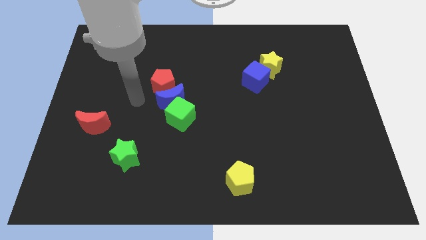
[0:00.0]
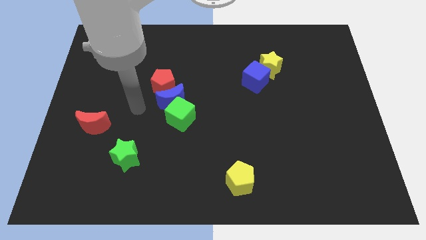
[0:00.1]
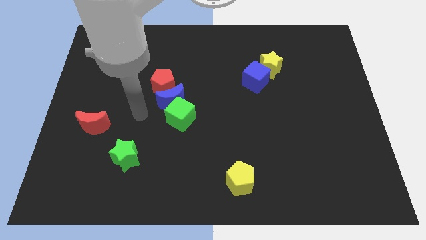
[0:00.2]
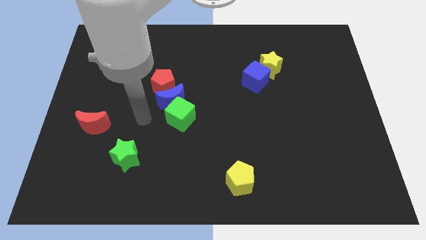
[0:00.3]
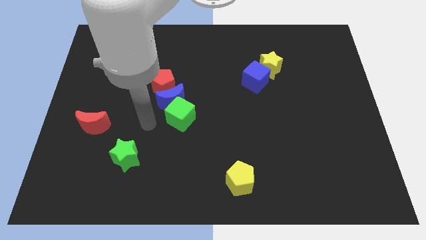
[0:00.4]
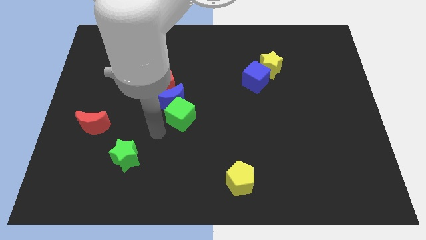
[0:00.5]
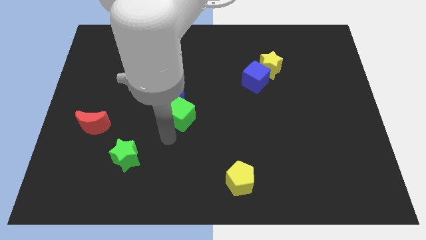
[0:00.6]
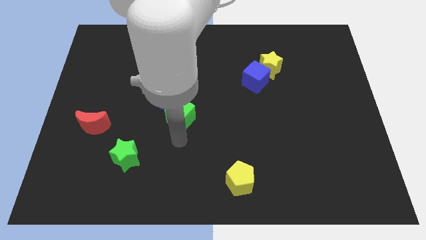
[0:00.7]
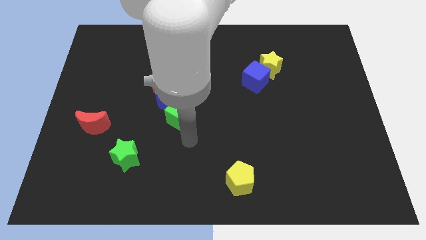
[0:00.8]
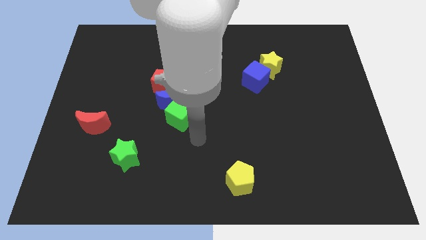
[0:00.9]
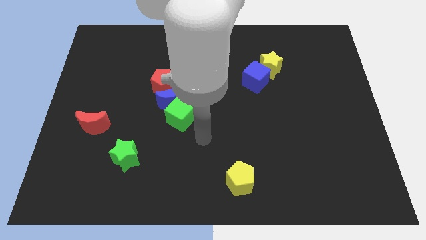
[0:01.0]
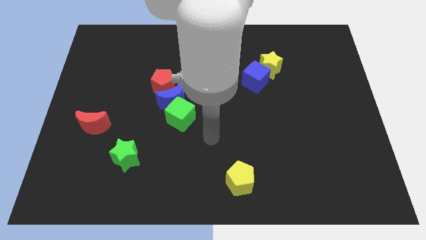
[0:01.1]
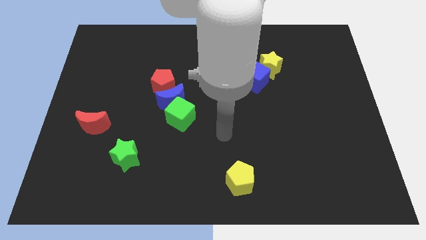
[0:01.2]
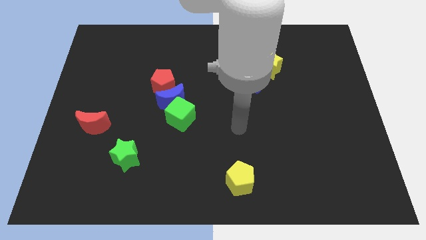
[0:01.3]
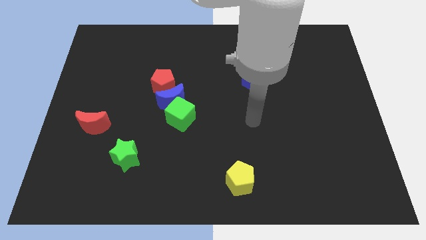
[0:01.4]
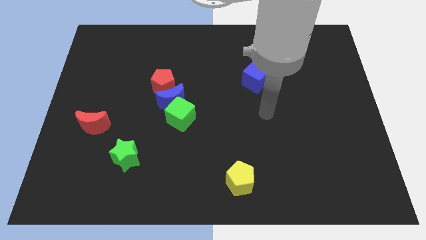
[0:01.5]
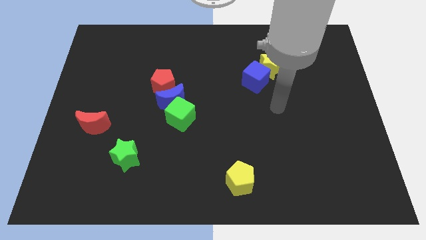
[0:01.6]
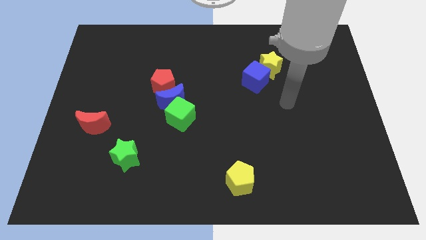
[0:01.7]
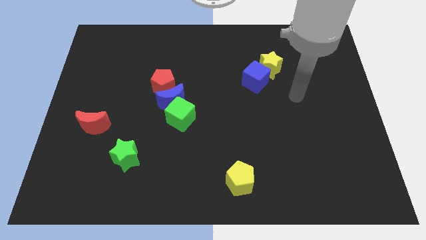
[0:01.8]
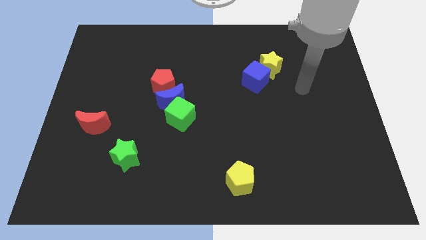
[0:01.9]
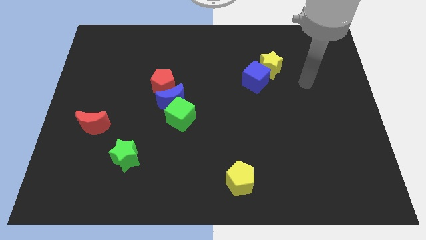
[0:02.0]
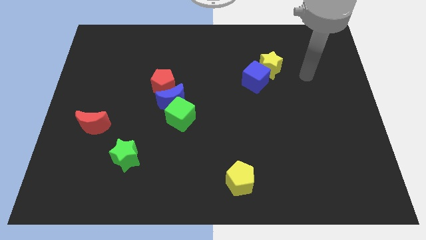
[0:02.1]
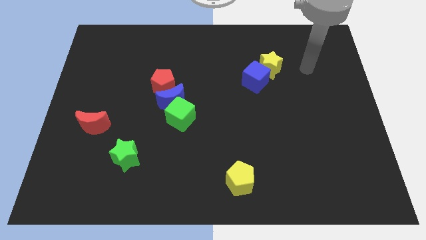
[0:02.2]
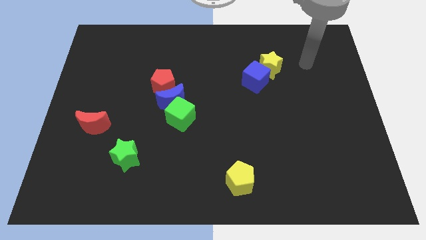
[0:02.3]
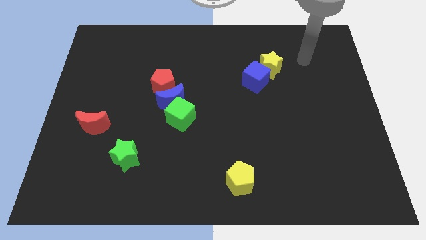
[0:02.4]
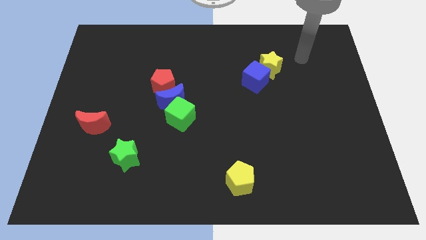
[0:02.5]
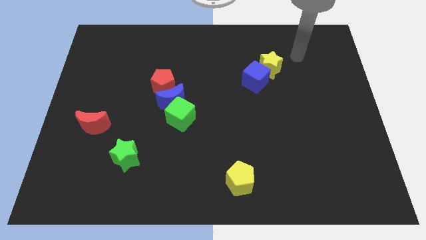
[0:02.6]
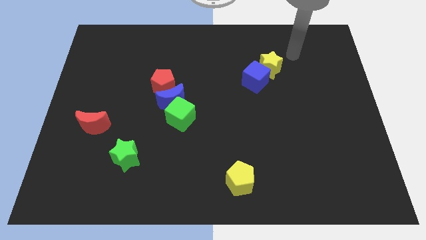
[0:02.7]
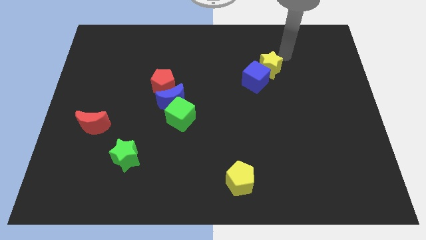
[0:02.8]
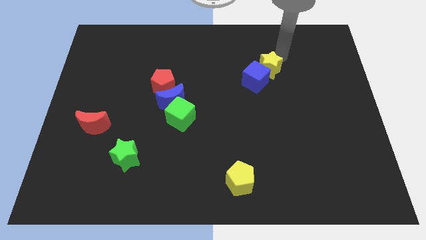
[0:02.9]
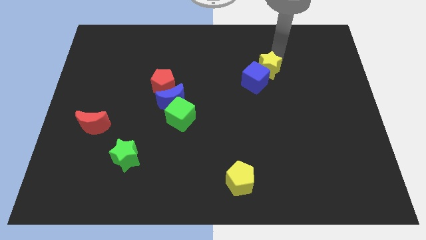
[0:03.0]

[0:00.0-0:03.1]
touch the yellow star

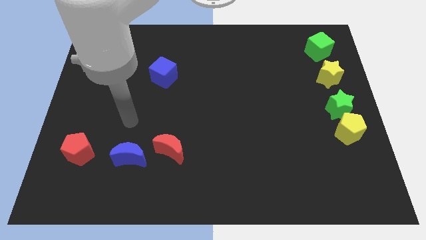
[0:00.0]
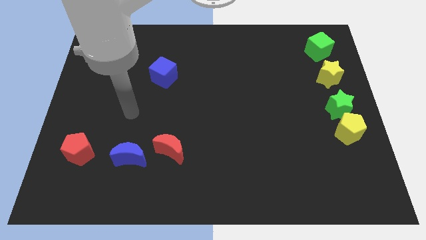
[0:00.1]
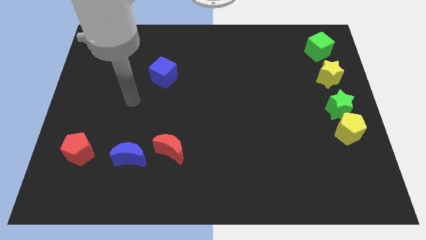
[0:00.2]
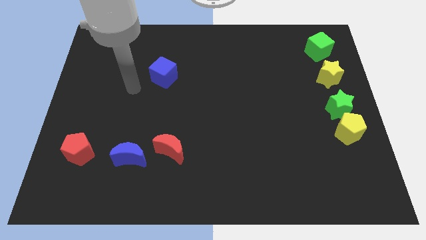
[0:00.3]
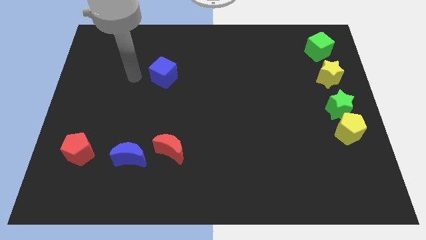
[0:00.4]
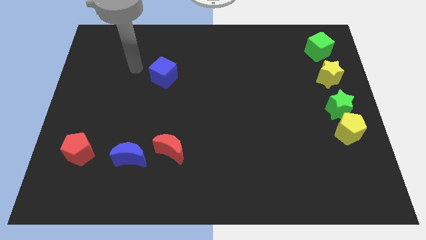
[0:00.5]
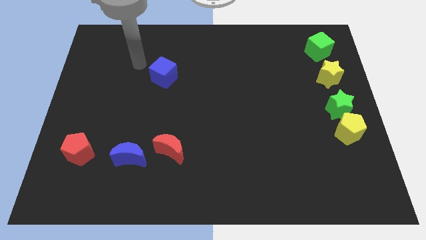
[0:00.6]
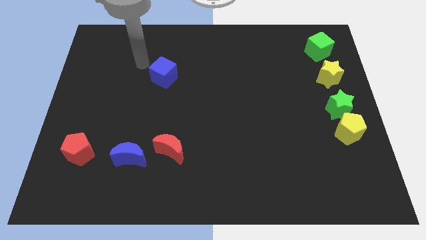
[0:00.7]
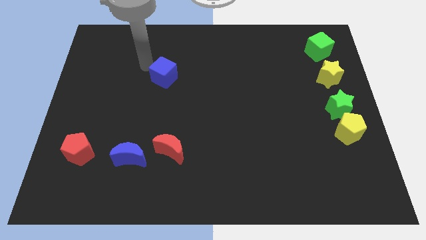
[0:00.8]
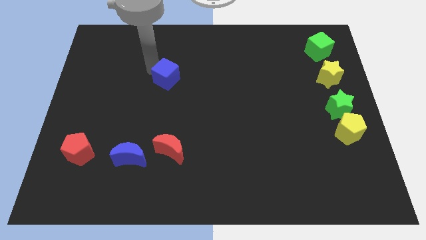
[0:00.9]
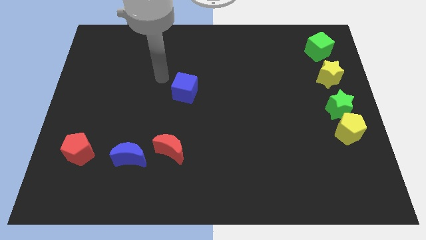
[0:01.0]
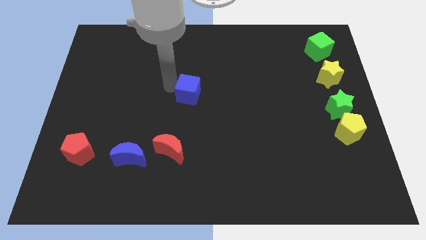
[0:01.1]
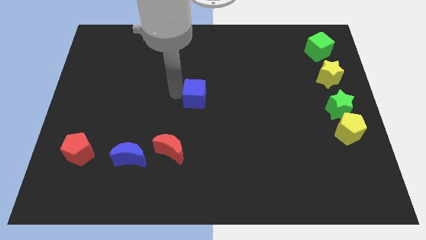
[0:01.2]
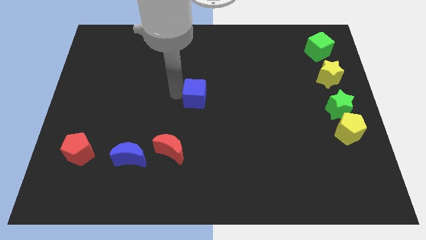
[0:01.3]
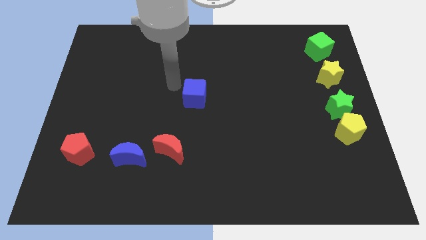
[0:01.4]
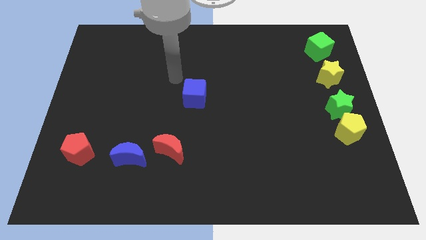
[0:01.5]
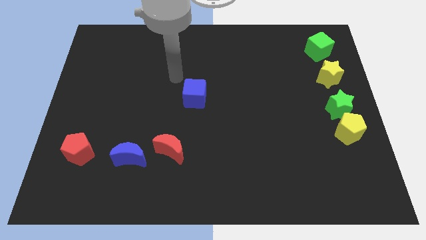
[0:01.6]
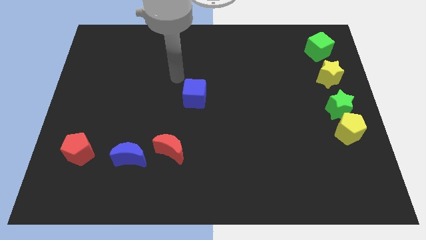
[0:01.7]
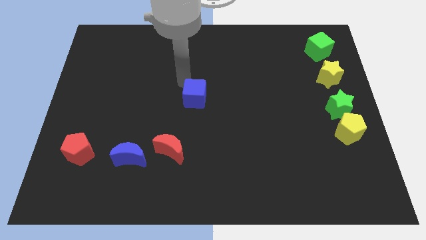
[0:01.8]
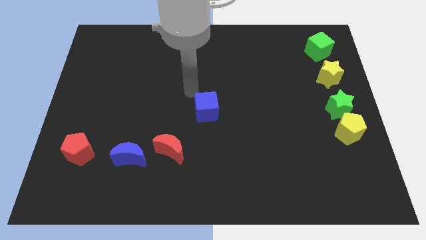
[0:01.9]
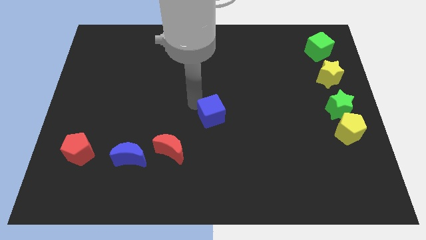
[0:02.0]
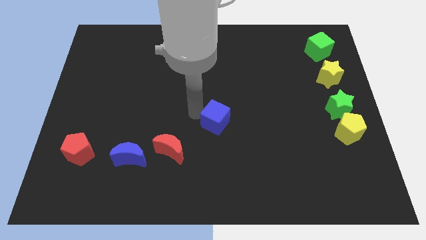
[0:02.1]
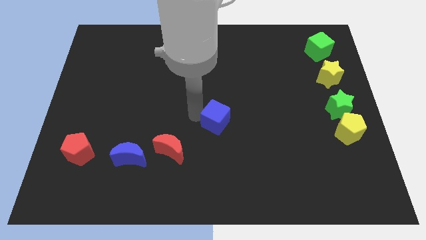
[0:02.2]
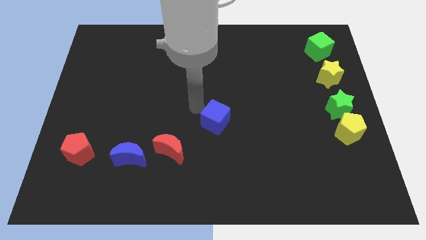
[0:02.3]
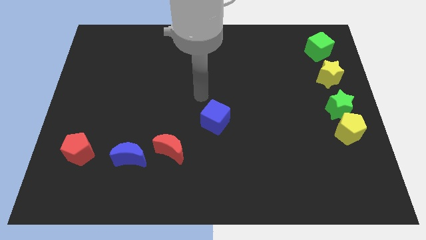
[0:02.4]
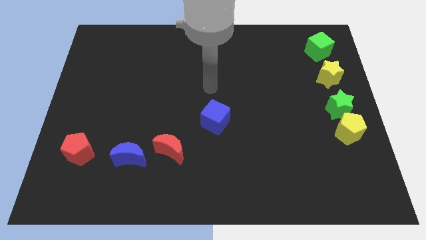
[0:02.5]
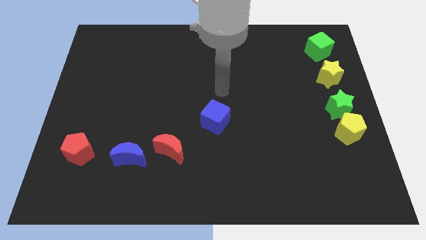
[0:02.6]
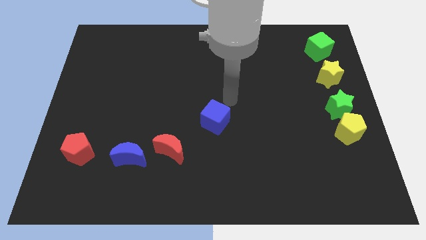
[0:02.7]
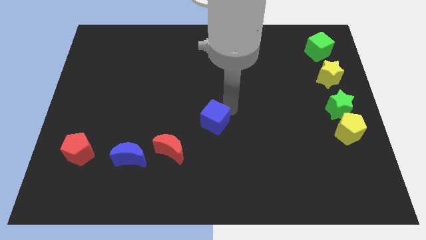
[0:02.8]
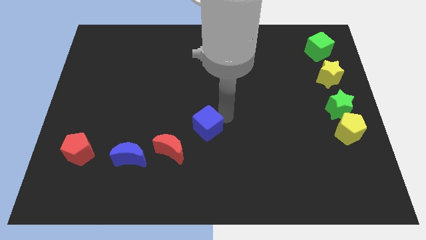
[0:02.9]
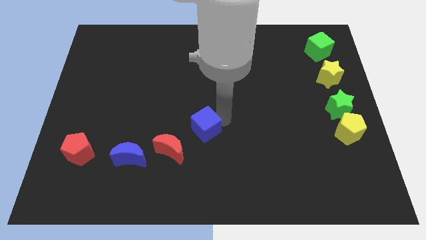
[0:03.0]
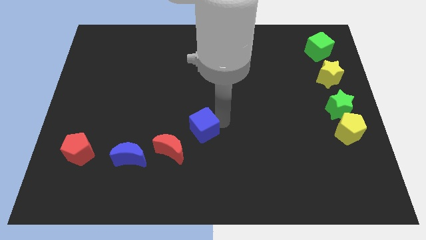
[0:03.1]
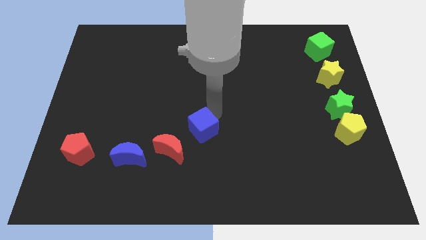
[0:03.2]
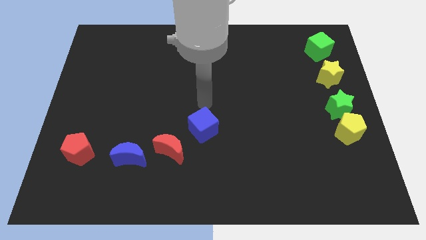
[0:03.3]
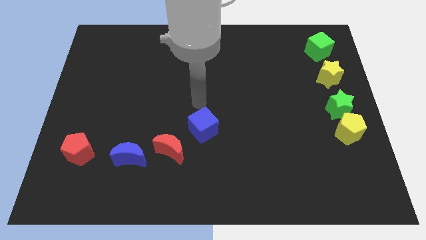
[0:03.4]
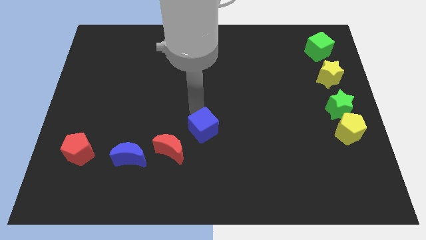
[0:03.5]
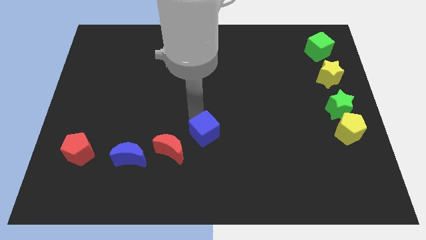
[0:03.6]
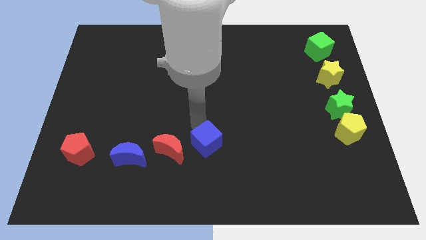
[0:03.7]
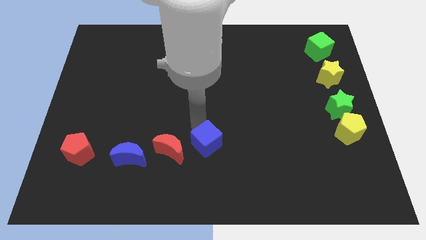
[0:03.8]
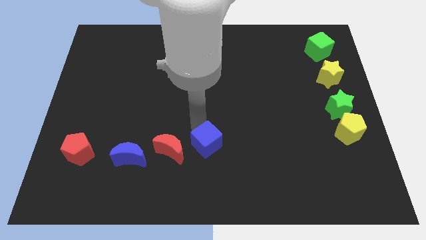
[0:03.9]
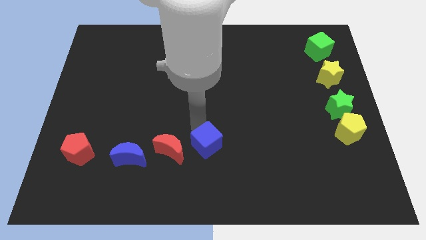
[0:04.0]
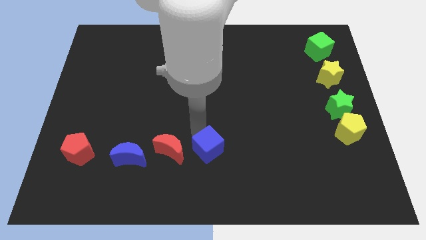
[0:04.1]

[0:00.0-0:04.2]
push blue cube right to the red moon

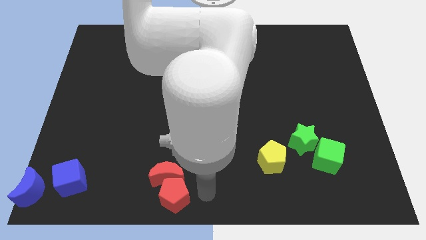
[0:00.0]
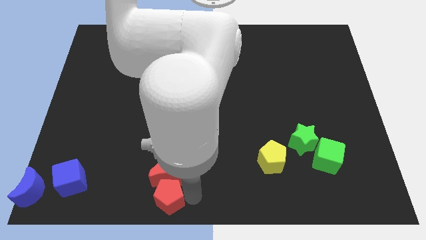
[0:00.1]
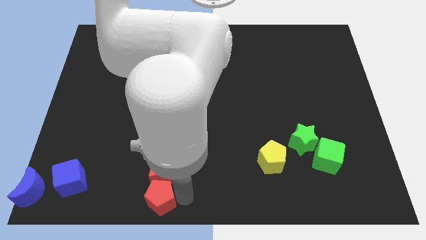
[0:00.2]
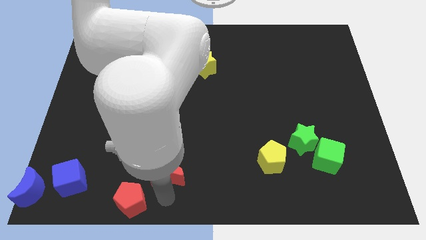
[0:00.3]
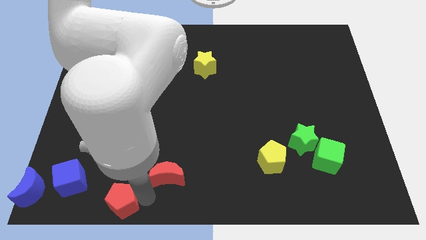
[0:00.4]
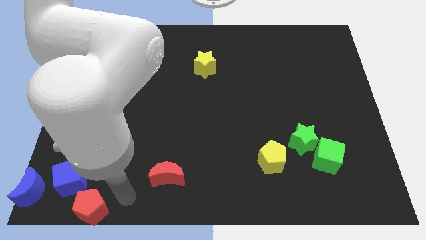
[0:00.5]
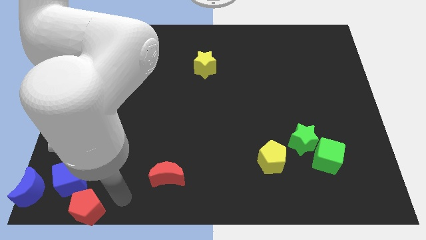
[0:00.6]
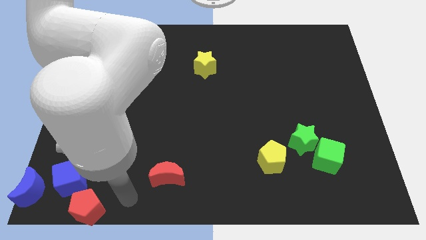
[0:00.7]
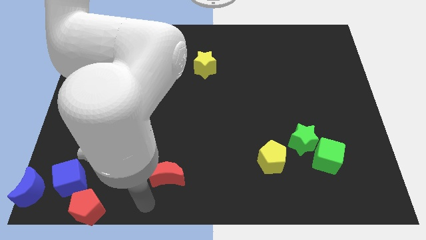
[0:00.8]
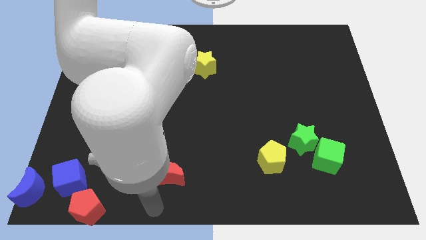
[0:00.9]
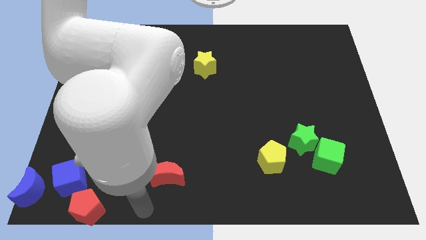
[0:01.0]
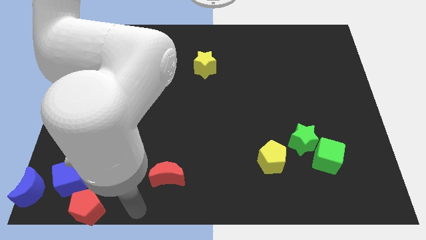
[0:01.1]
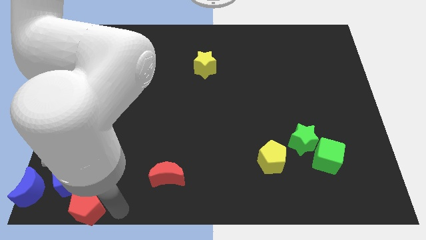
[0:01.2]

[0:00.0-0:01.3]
separate the red pentagon from the red crescent

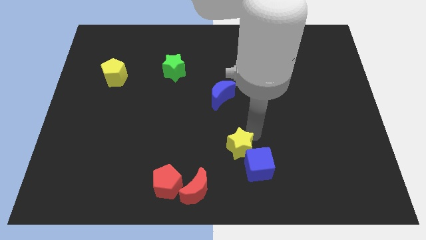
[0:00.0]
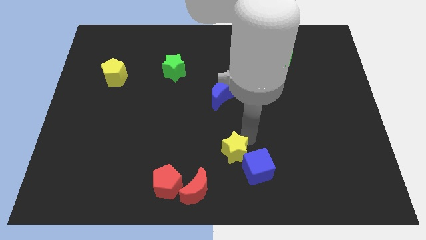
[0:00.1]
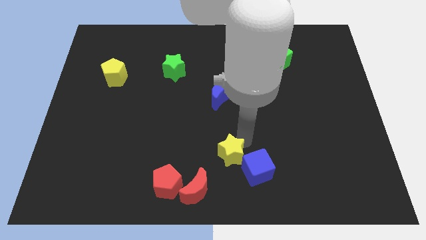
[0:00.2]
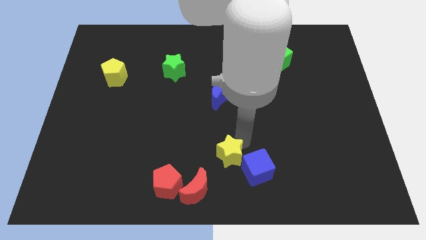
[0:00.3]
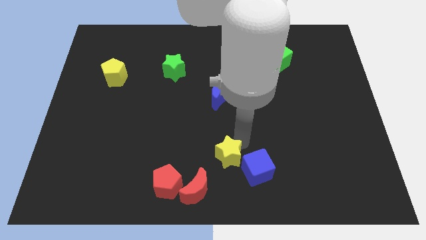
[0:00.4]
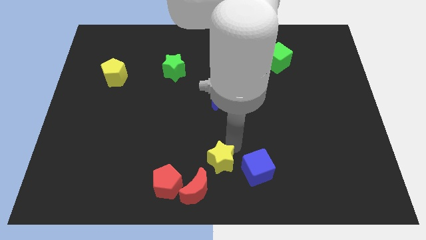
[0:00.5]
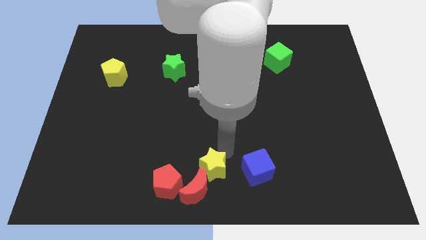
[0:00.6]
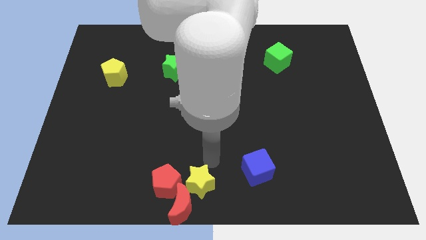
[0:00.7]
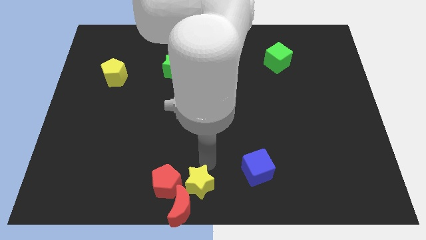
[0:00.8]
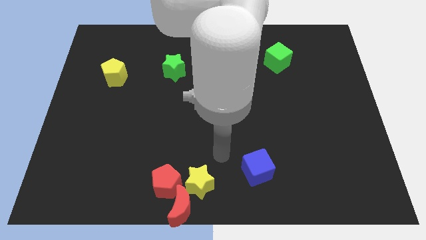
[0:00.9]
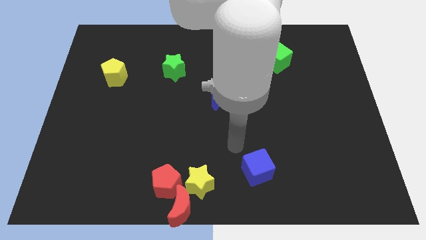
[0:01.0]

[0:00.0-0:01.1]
push the yellow star into the red crescent
